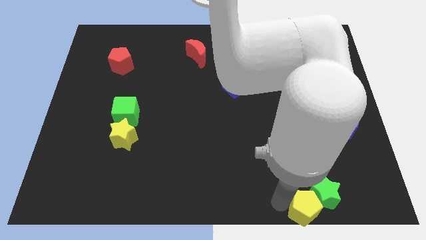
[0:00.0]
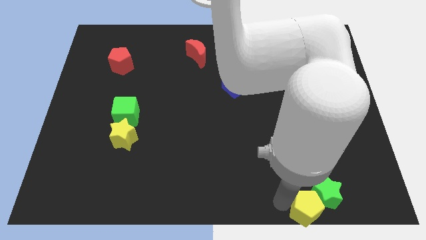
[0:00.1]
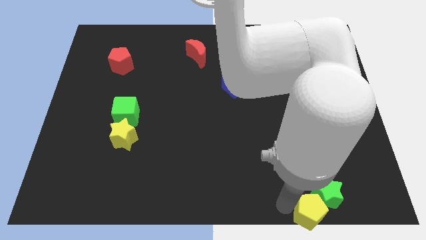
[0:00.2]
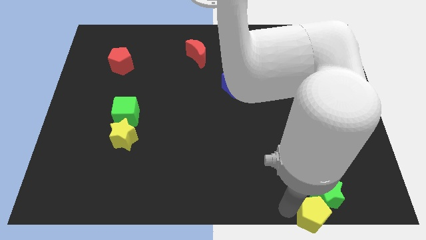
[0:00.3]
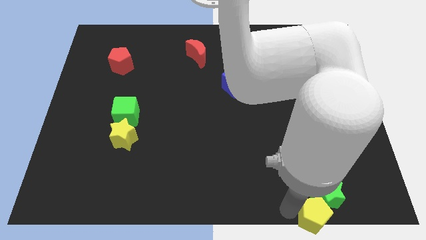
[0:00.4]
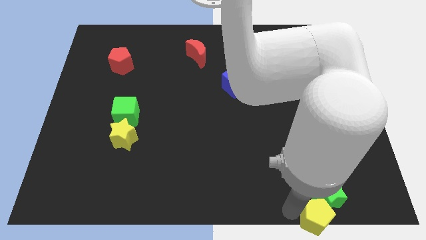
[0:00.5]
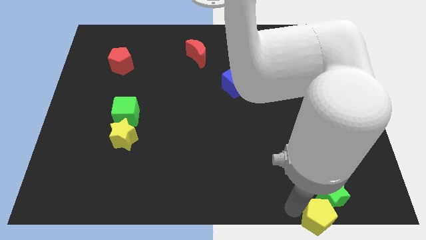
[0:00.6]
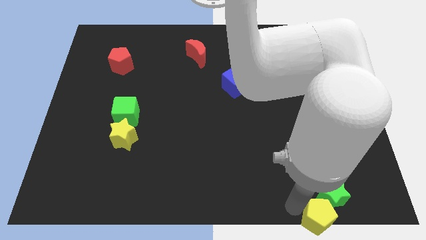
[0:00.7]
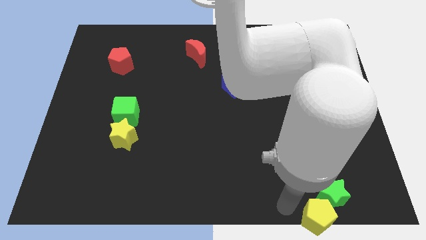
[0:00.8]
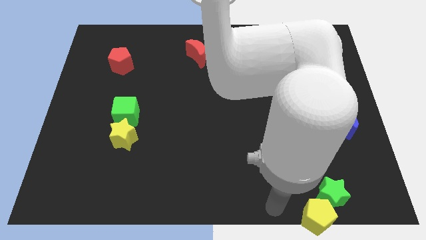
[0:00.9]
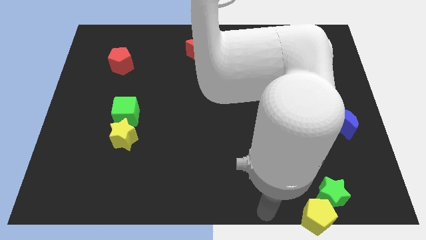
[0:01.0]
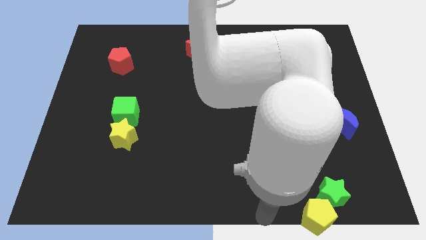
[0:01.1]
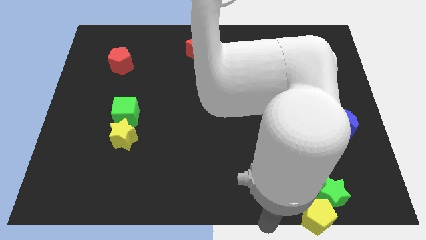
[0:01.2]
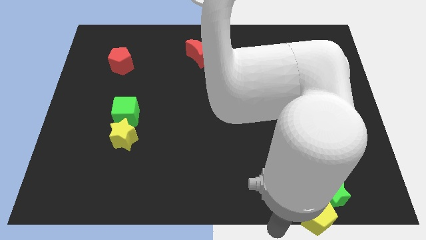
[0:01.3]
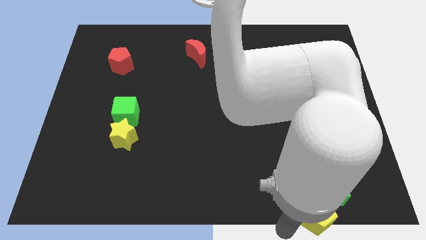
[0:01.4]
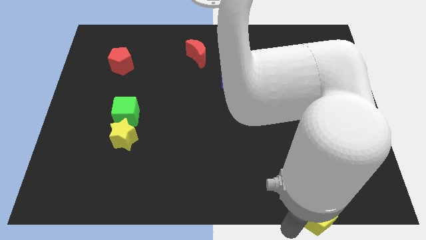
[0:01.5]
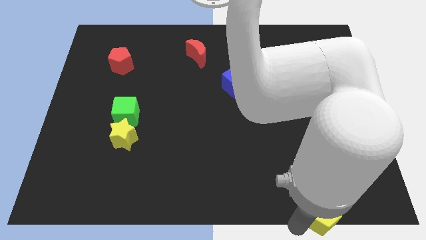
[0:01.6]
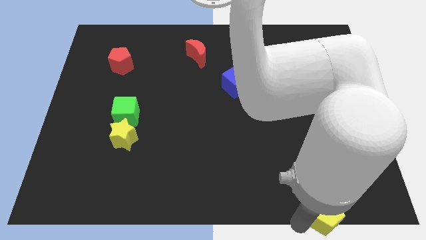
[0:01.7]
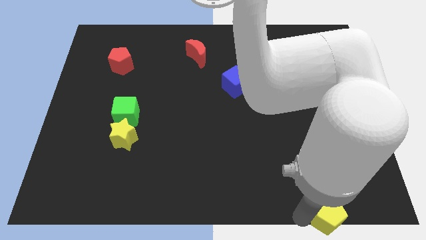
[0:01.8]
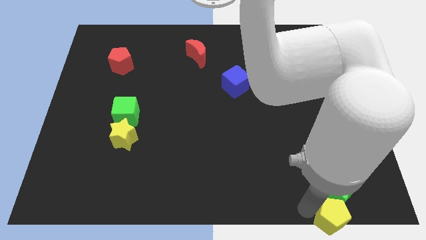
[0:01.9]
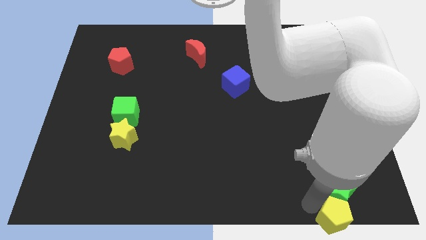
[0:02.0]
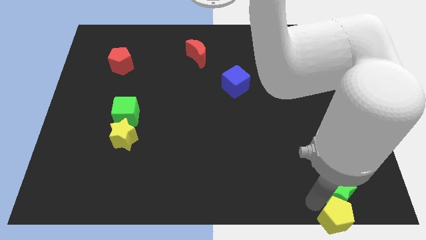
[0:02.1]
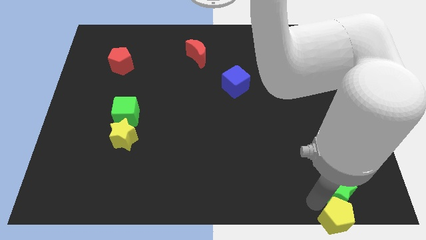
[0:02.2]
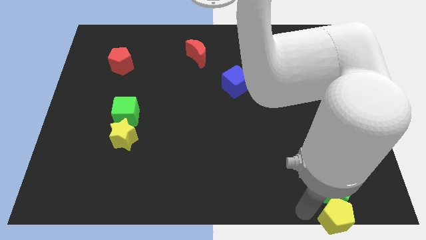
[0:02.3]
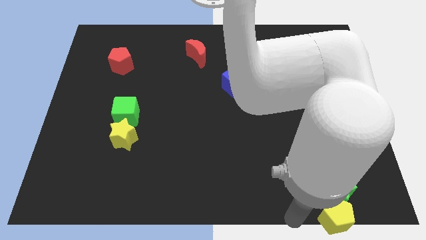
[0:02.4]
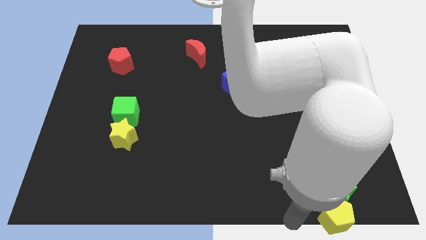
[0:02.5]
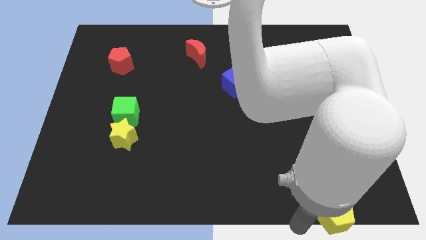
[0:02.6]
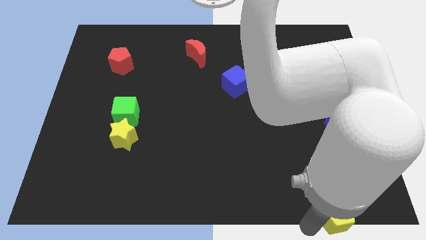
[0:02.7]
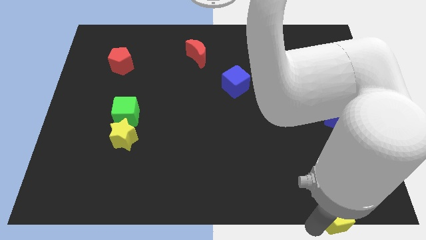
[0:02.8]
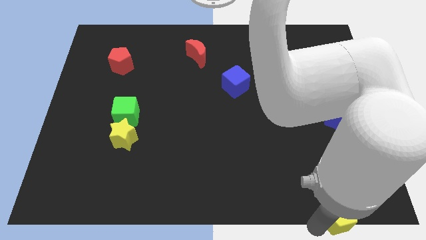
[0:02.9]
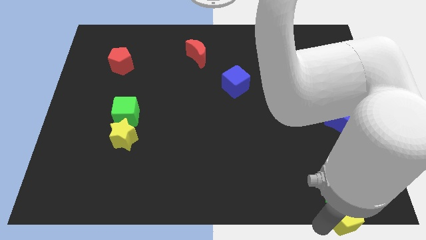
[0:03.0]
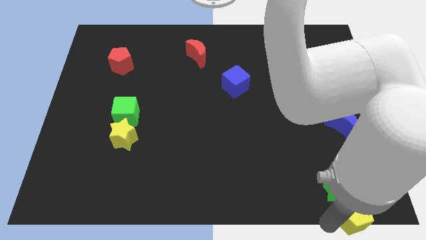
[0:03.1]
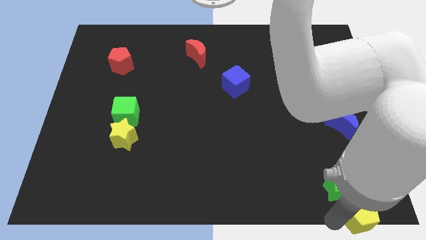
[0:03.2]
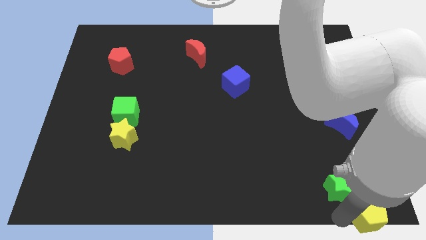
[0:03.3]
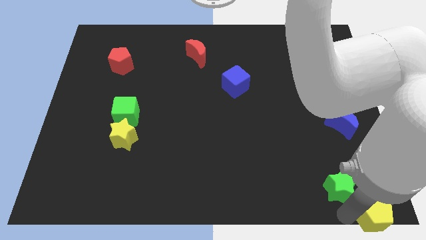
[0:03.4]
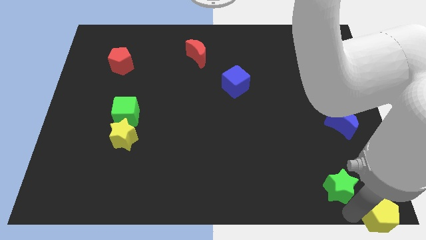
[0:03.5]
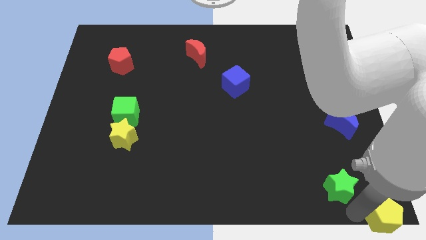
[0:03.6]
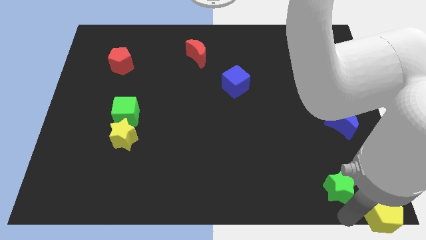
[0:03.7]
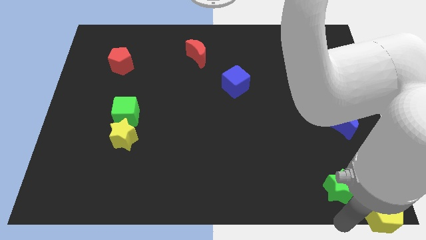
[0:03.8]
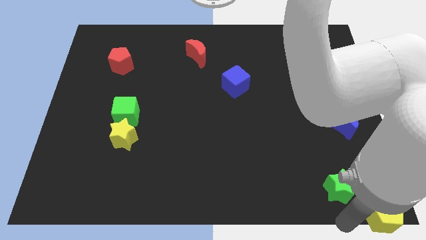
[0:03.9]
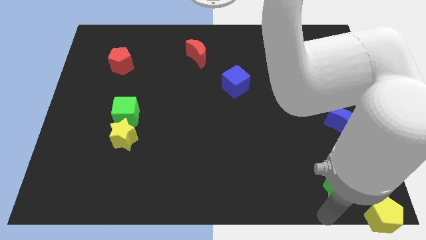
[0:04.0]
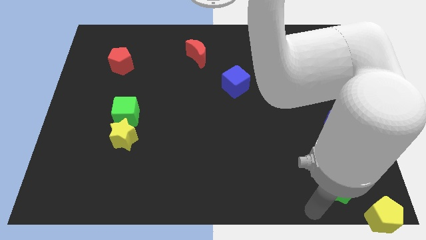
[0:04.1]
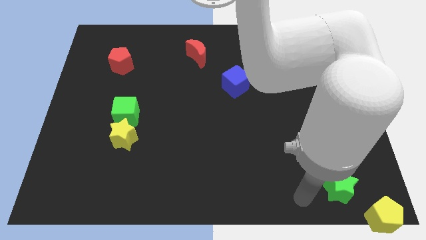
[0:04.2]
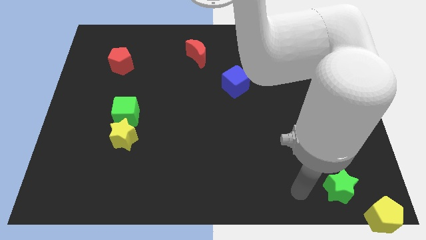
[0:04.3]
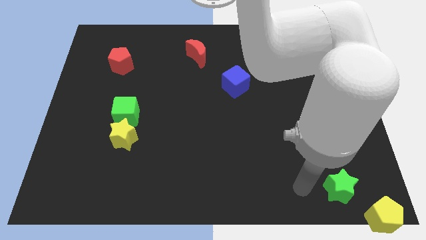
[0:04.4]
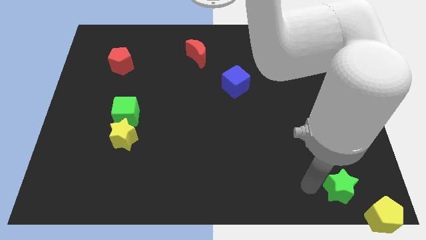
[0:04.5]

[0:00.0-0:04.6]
place yellow pentagon to the bottom right corner of the board

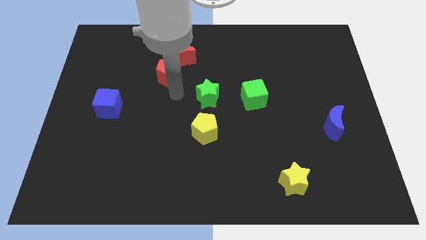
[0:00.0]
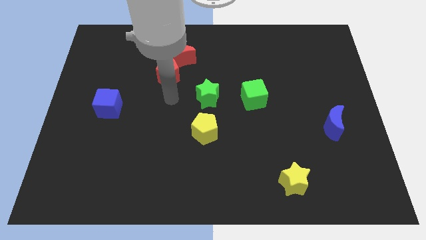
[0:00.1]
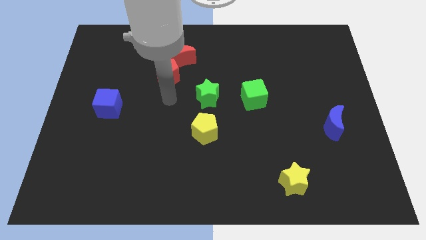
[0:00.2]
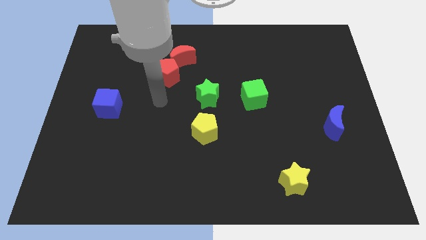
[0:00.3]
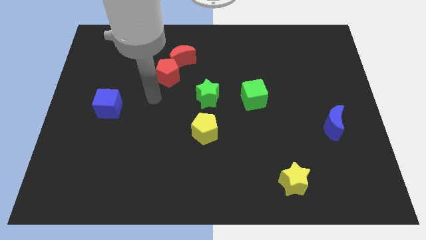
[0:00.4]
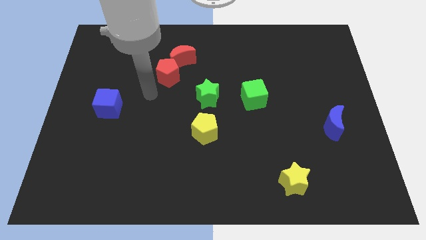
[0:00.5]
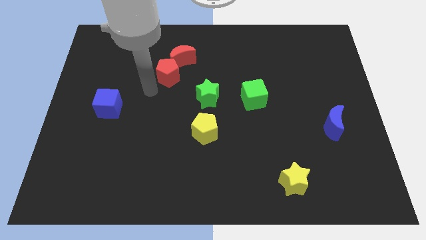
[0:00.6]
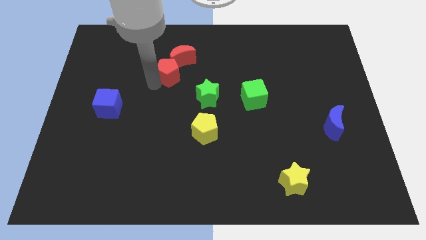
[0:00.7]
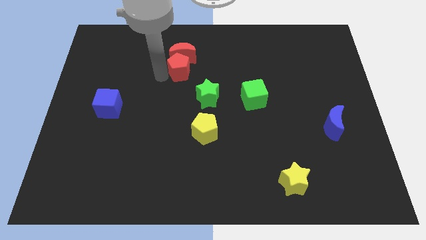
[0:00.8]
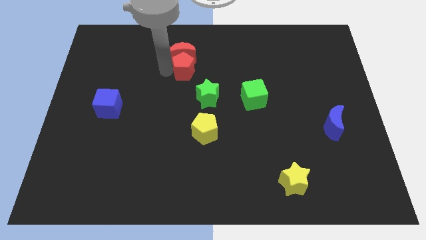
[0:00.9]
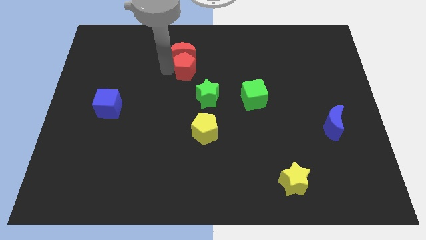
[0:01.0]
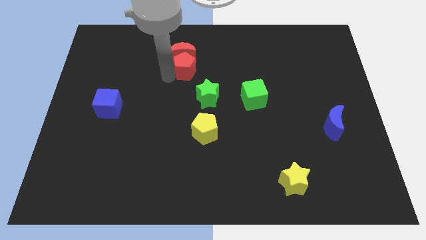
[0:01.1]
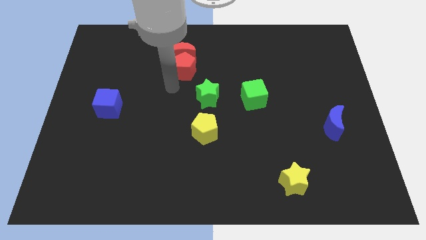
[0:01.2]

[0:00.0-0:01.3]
place the red pentagon below the red crescent

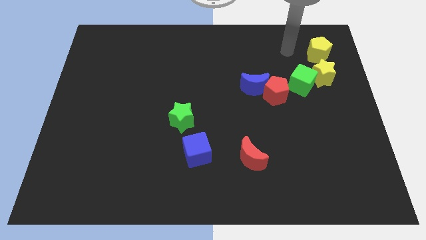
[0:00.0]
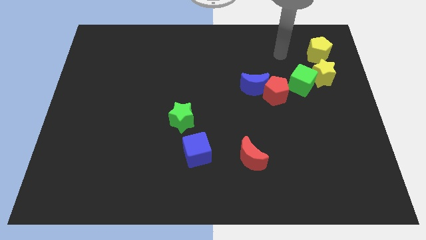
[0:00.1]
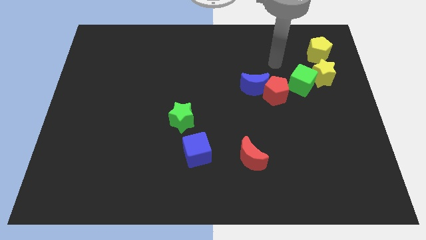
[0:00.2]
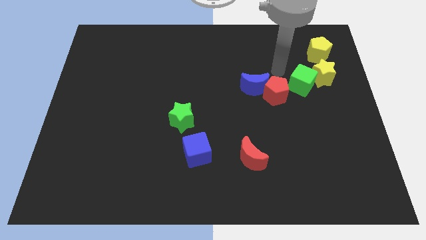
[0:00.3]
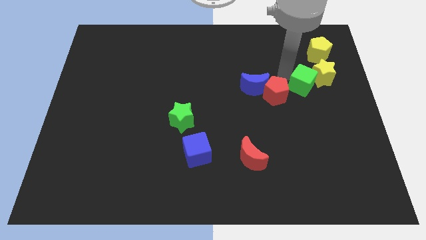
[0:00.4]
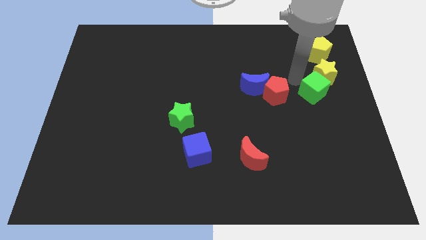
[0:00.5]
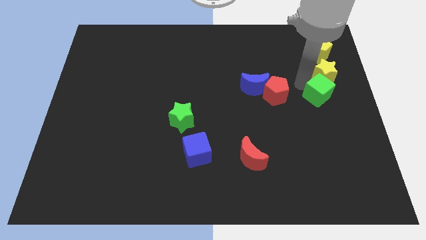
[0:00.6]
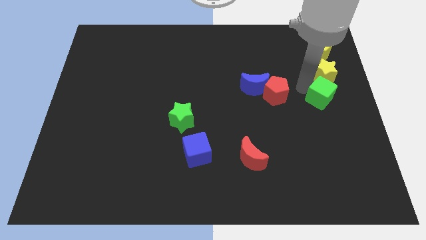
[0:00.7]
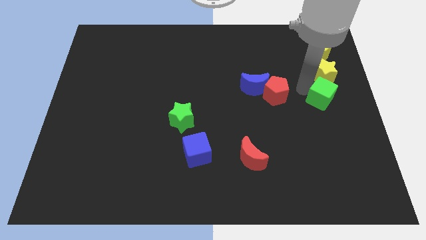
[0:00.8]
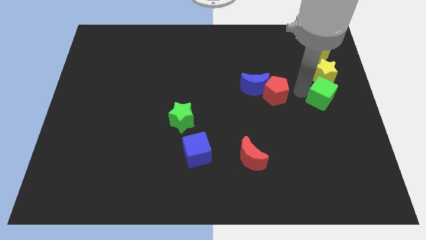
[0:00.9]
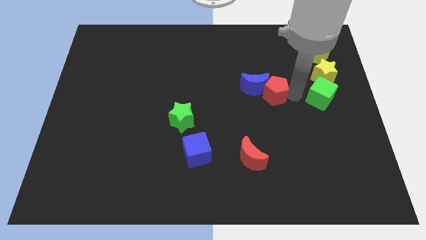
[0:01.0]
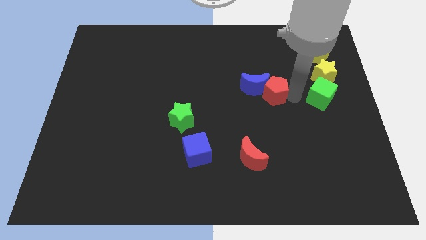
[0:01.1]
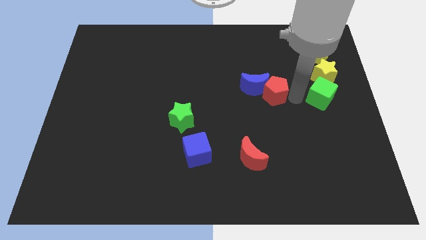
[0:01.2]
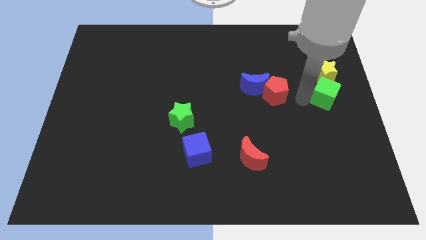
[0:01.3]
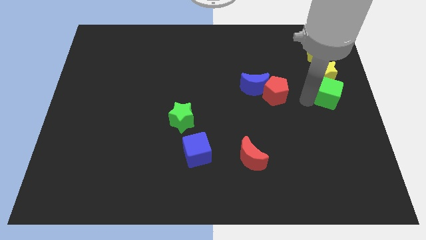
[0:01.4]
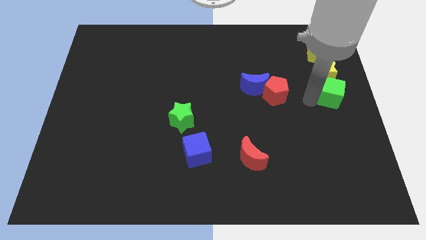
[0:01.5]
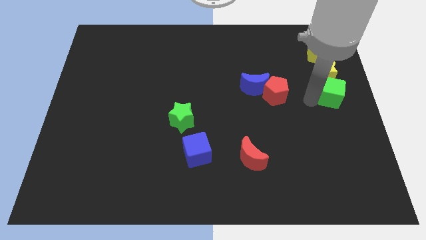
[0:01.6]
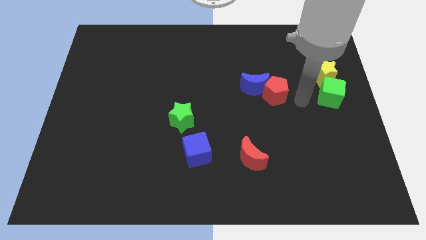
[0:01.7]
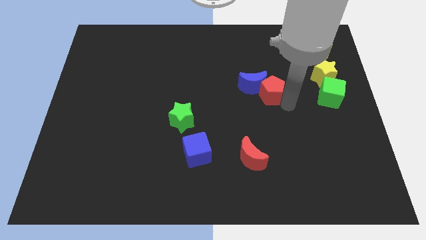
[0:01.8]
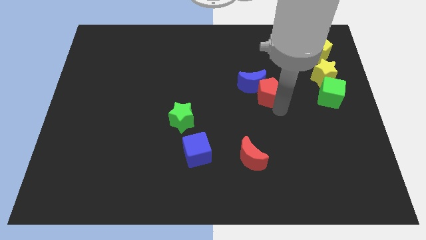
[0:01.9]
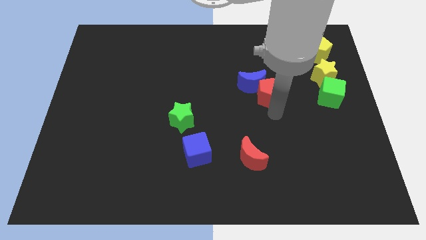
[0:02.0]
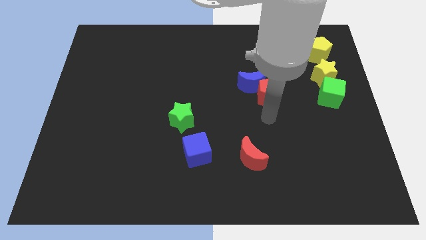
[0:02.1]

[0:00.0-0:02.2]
place the green cube below the yellow star

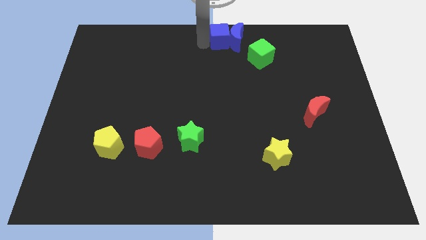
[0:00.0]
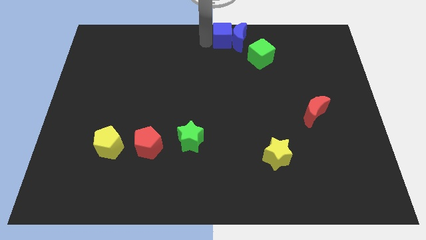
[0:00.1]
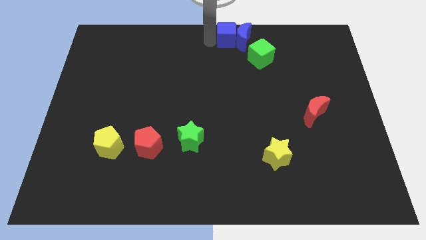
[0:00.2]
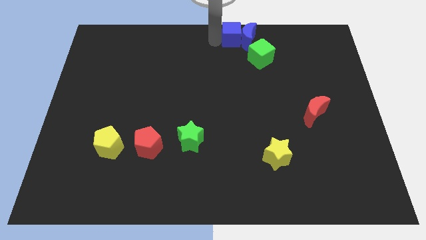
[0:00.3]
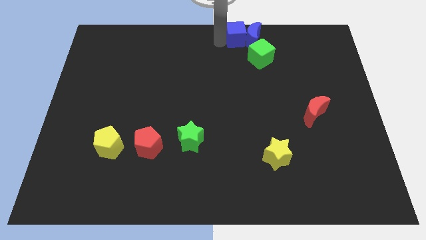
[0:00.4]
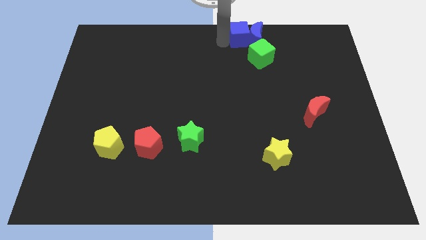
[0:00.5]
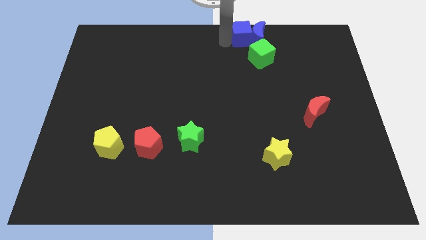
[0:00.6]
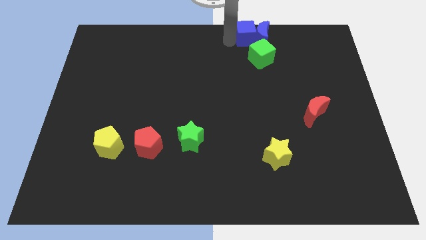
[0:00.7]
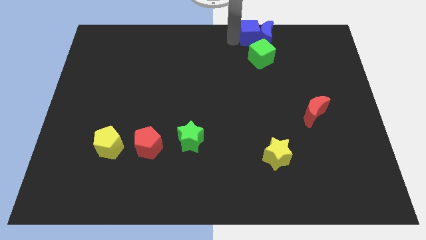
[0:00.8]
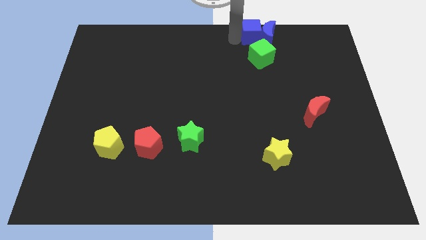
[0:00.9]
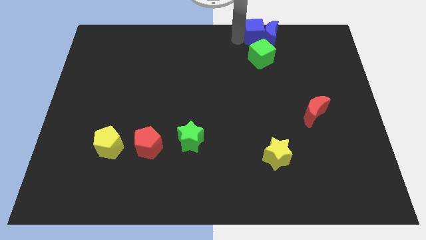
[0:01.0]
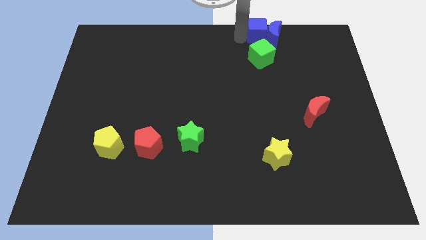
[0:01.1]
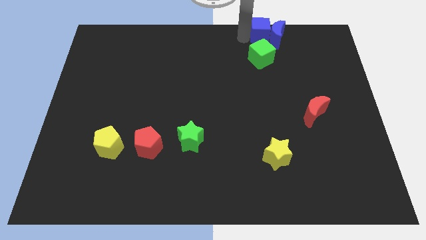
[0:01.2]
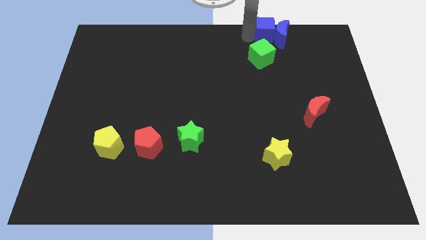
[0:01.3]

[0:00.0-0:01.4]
place the blue blocks above the green cube
